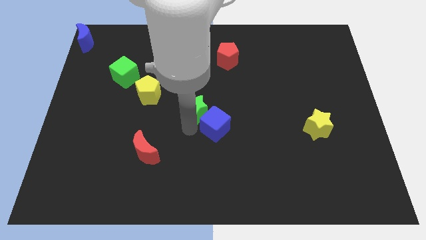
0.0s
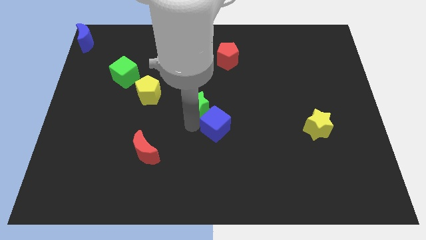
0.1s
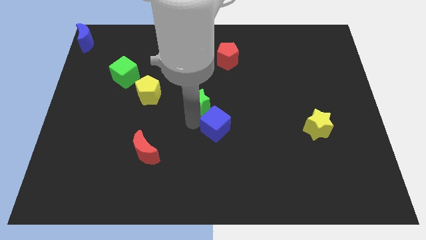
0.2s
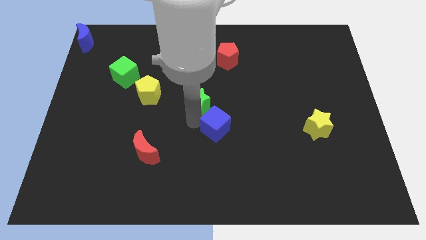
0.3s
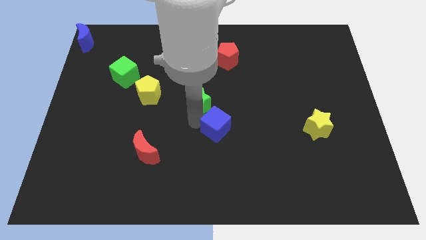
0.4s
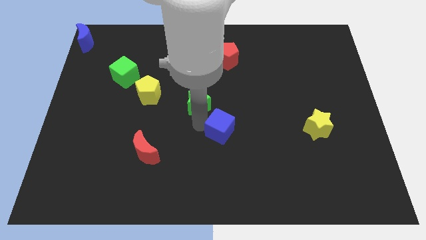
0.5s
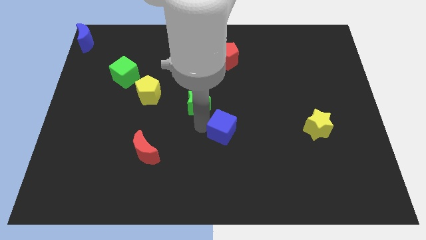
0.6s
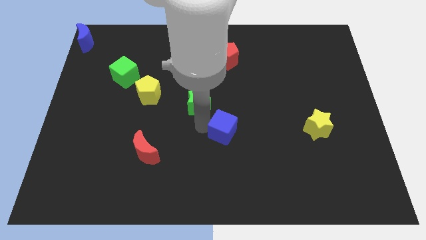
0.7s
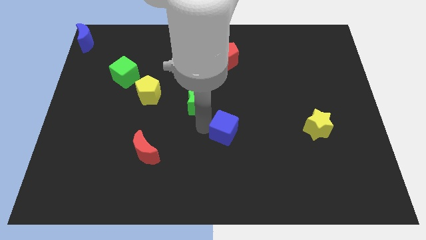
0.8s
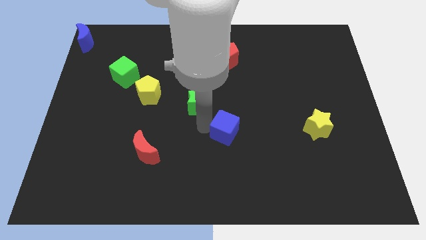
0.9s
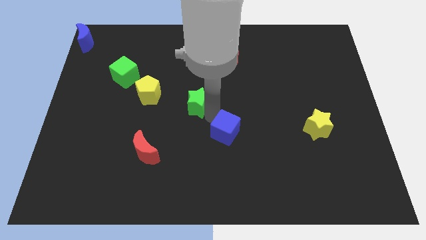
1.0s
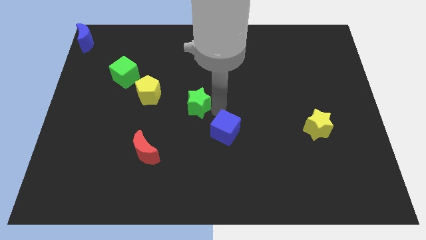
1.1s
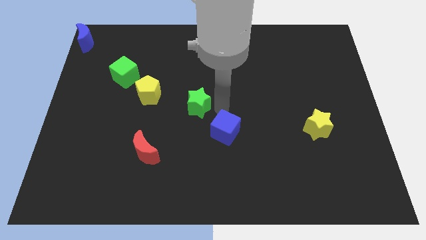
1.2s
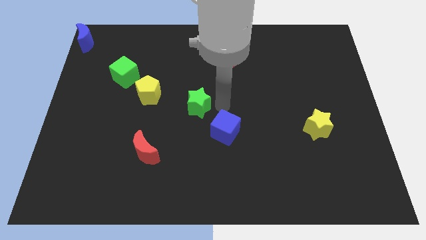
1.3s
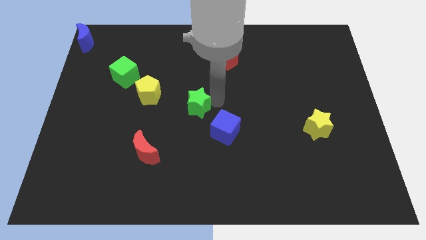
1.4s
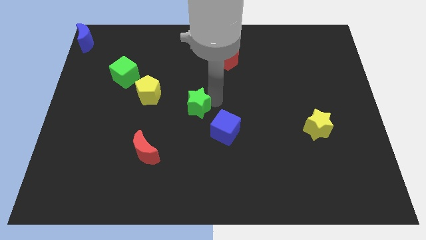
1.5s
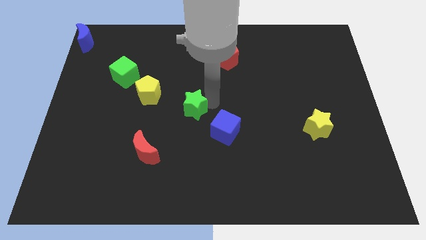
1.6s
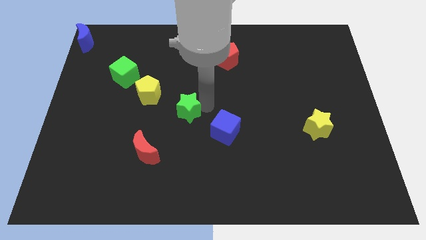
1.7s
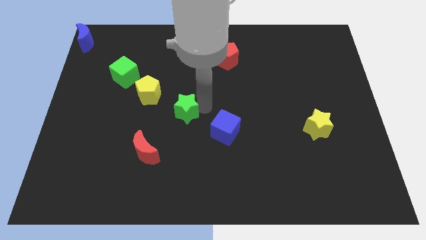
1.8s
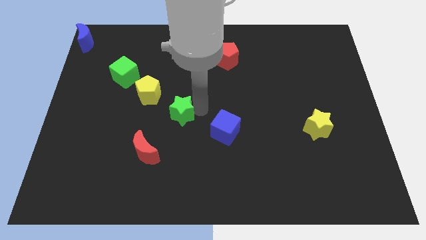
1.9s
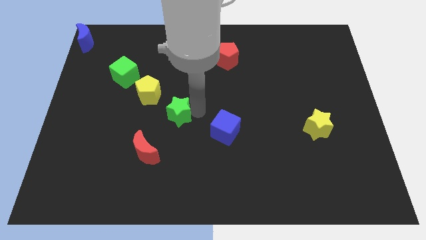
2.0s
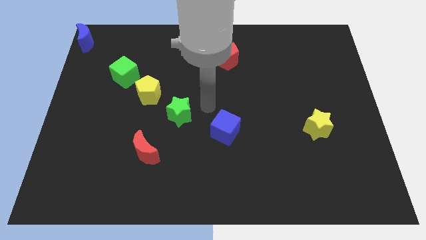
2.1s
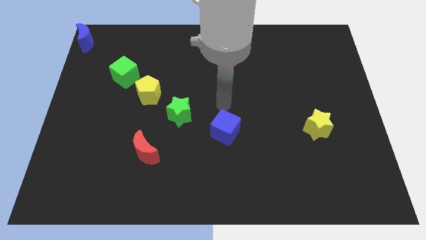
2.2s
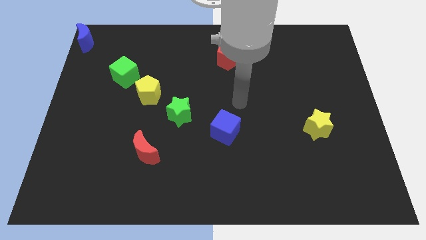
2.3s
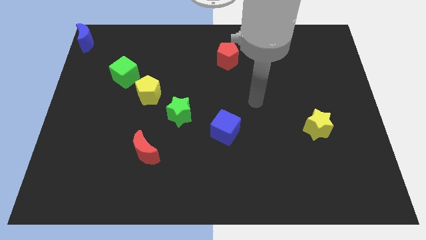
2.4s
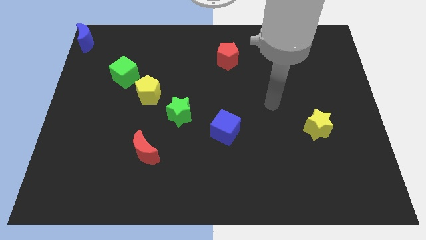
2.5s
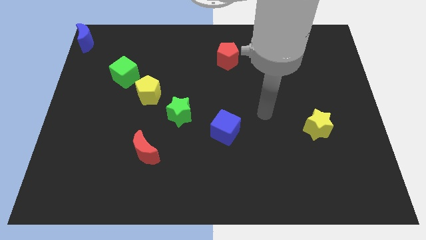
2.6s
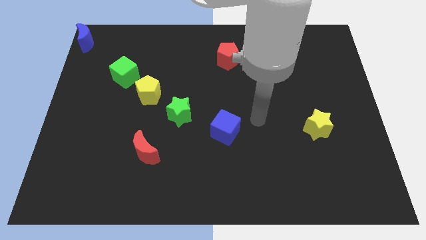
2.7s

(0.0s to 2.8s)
move the blue cube vertically below the red pentagon

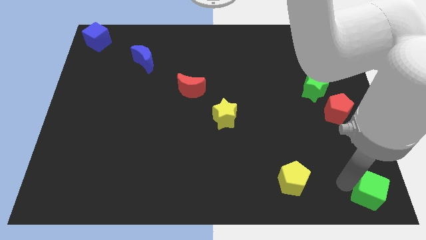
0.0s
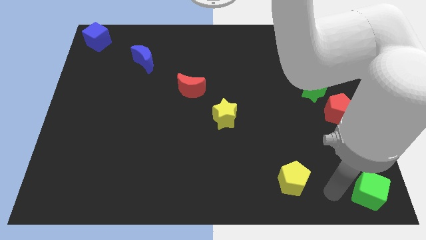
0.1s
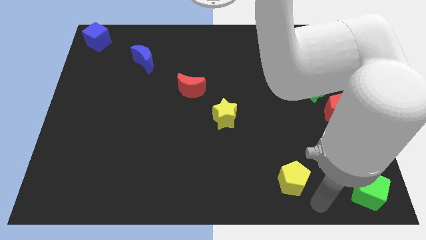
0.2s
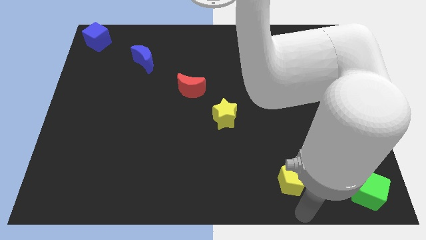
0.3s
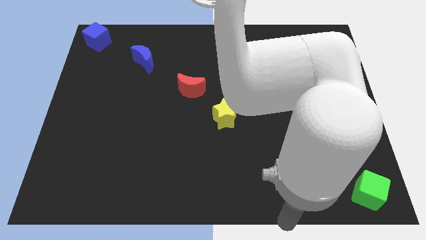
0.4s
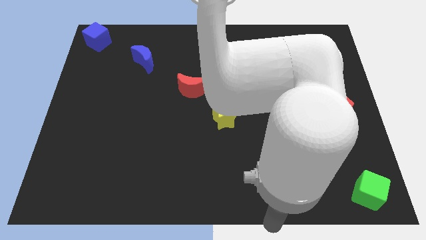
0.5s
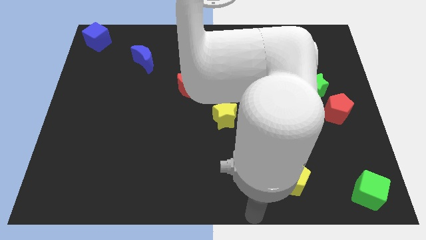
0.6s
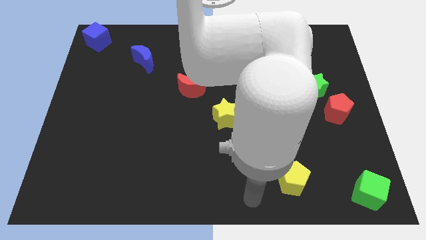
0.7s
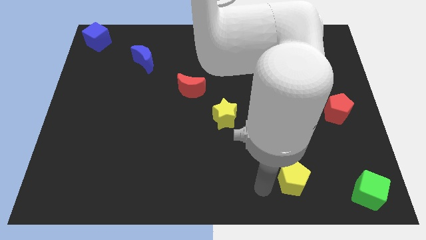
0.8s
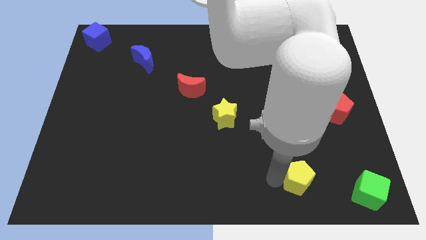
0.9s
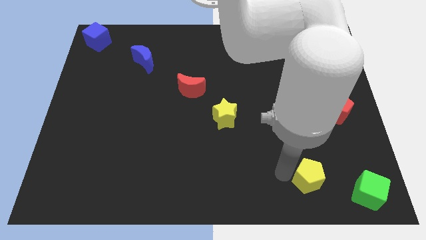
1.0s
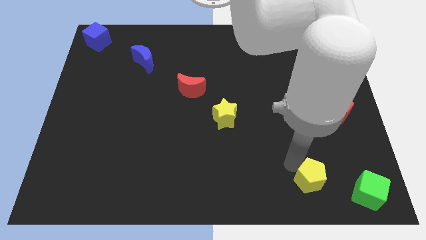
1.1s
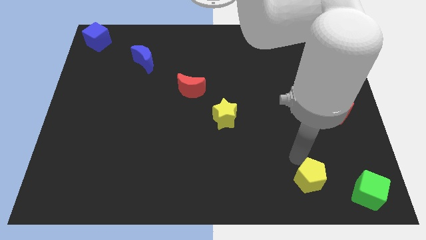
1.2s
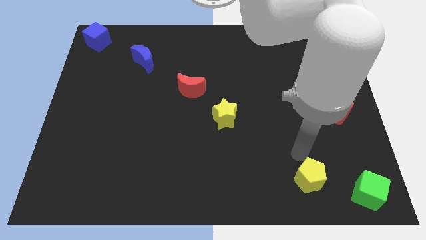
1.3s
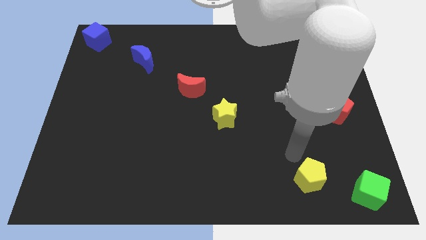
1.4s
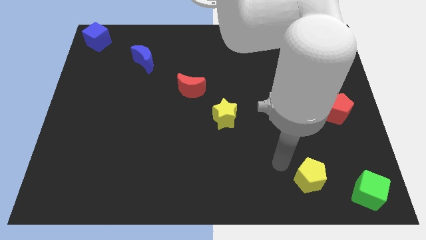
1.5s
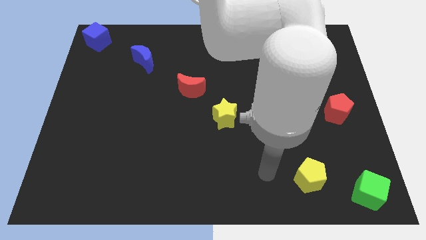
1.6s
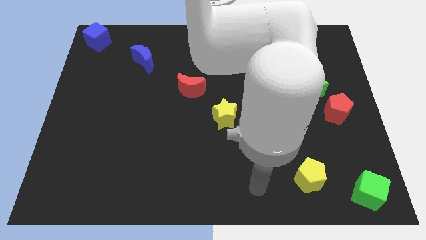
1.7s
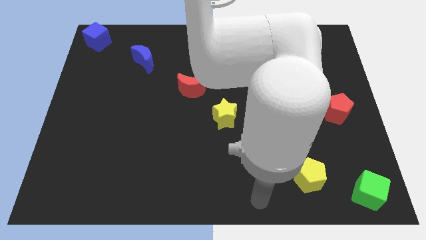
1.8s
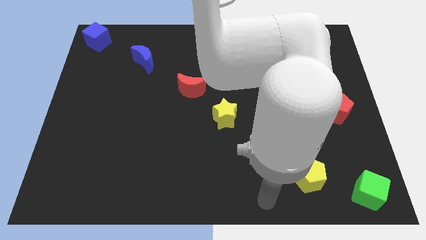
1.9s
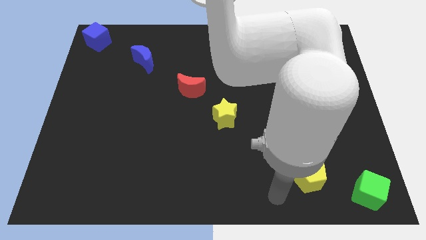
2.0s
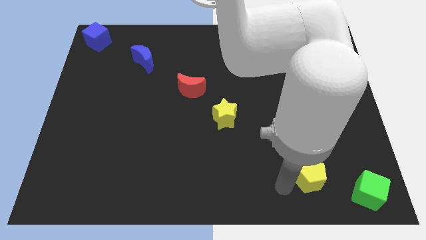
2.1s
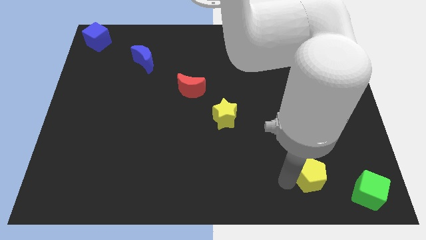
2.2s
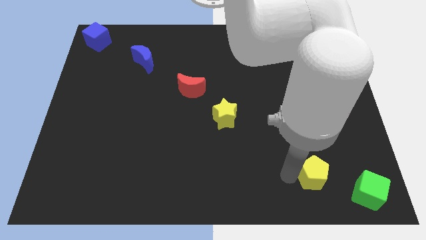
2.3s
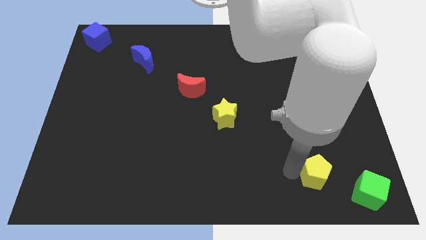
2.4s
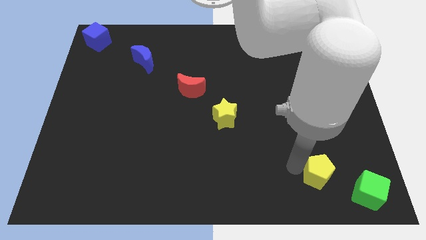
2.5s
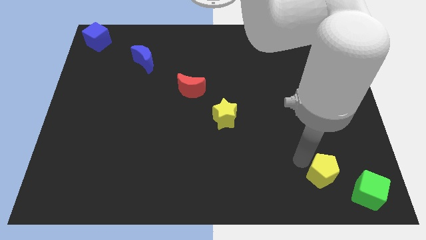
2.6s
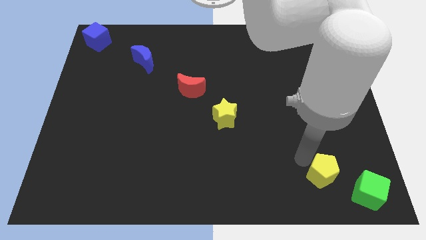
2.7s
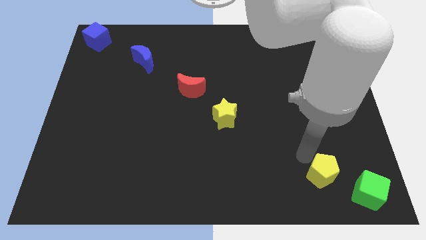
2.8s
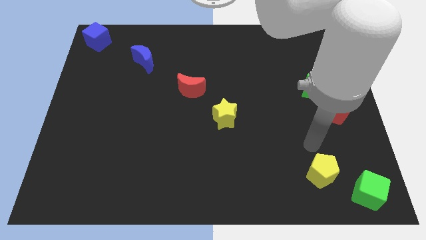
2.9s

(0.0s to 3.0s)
move yellow pentagon slightly diagonally towards green cube

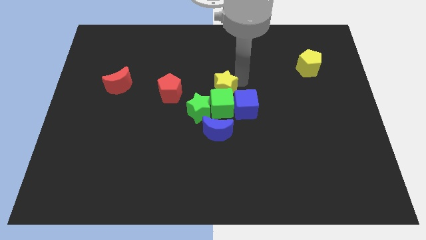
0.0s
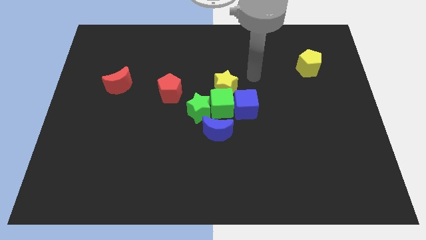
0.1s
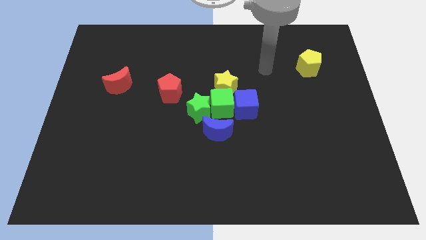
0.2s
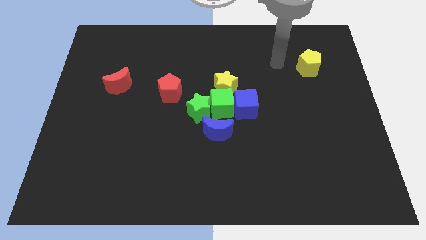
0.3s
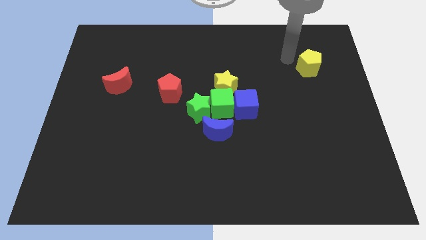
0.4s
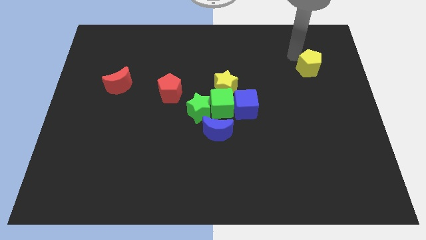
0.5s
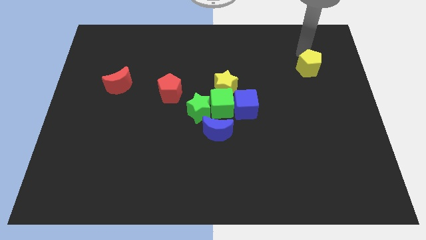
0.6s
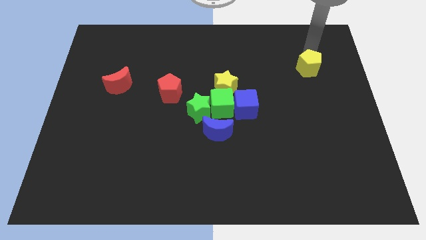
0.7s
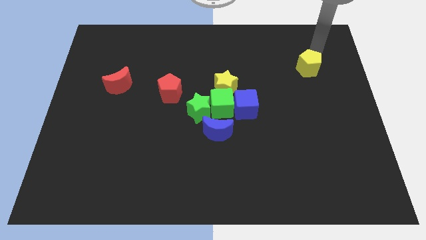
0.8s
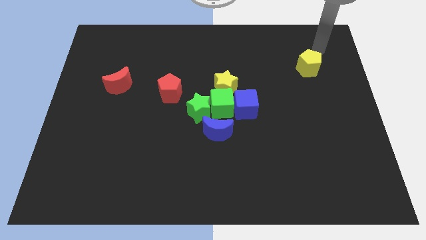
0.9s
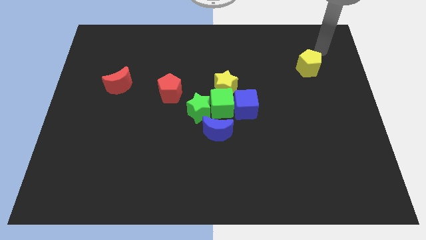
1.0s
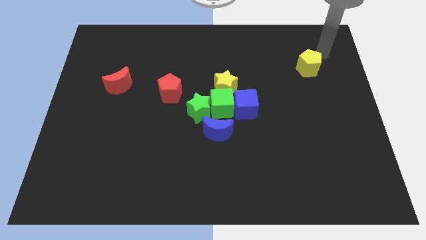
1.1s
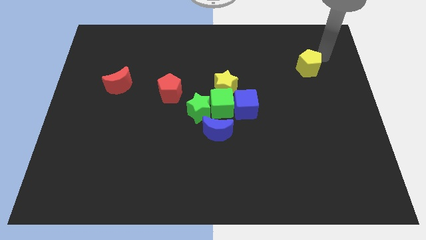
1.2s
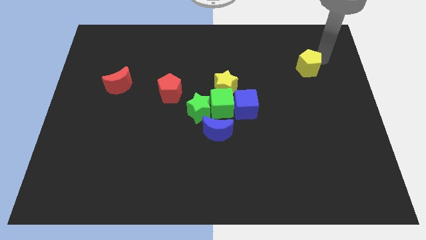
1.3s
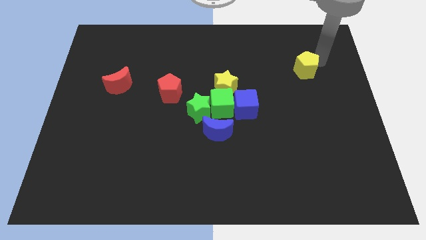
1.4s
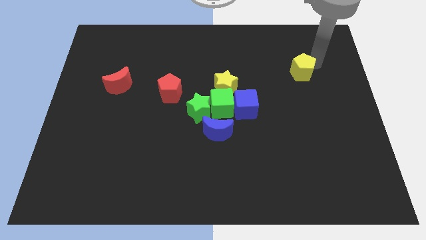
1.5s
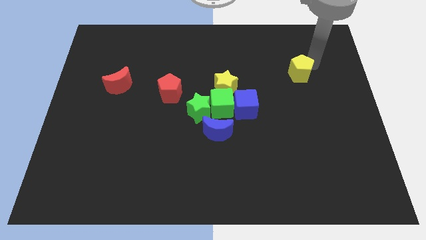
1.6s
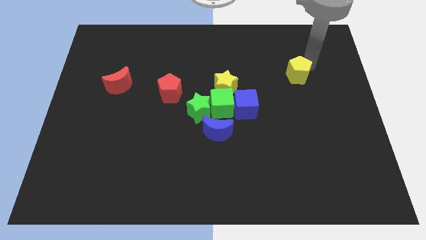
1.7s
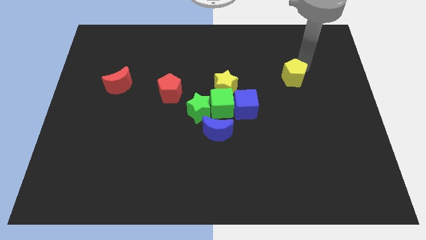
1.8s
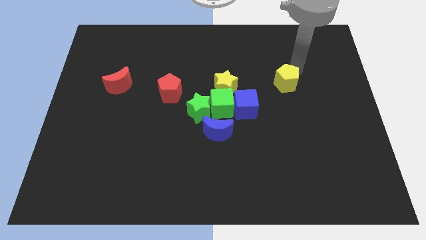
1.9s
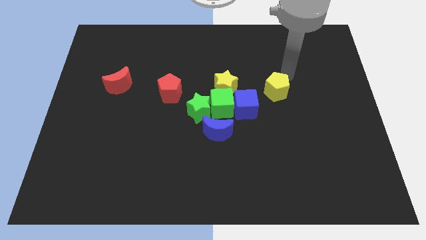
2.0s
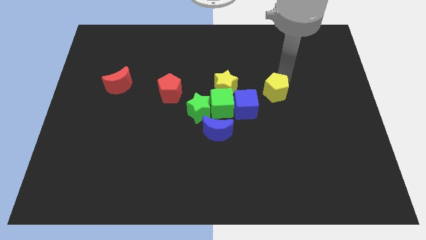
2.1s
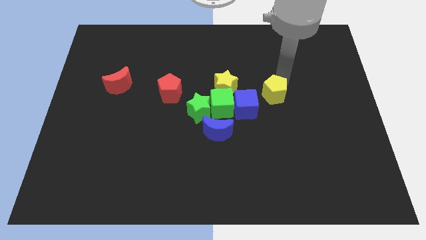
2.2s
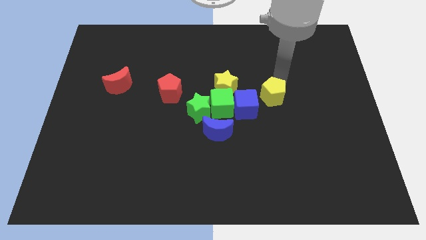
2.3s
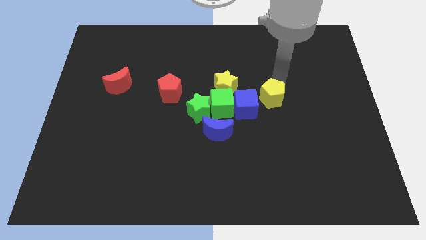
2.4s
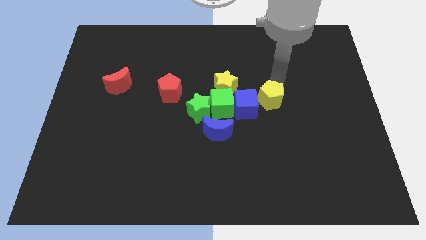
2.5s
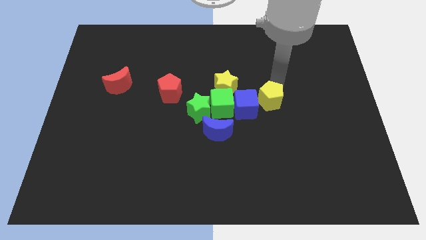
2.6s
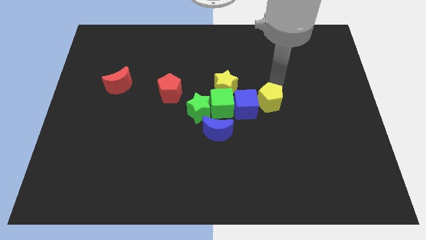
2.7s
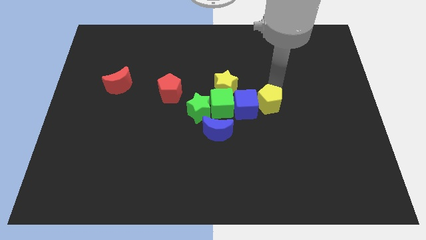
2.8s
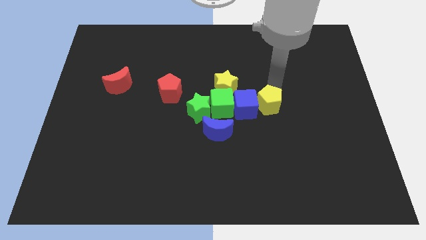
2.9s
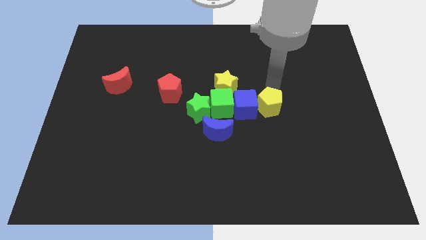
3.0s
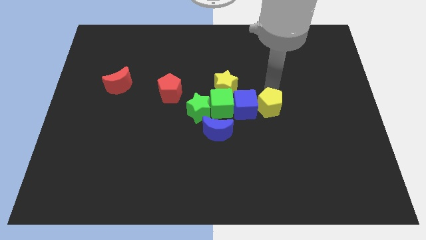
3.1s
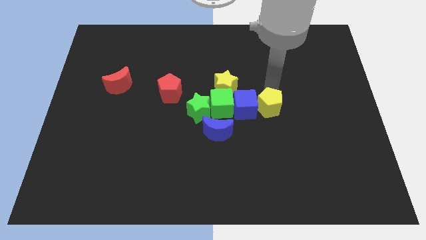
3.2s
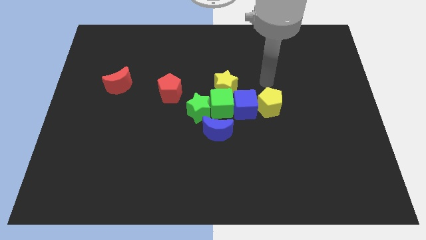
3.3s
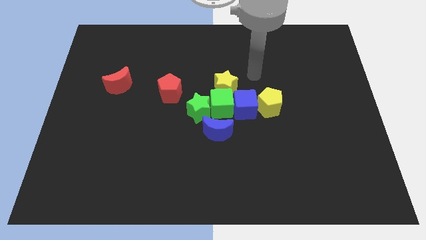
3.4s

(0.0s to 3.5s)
move the yellow pentagon to the right of the blue cube
